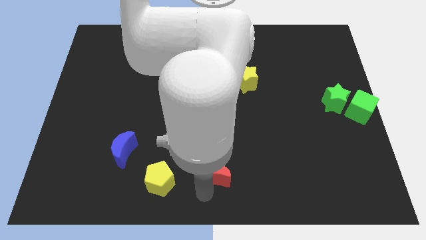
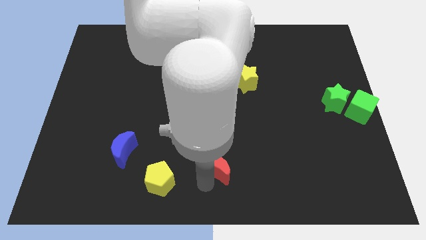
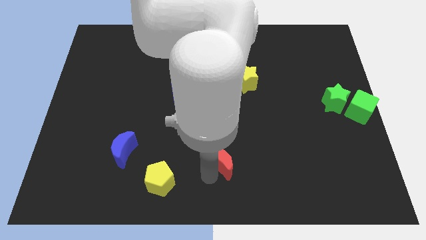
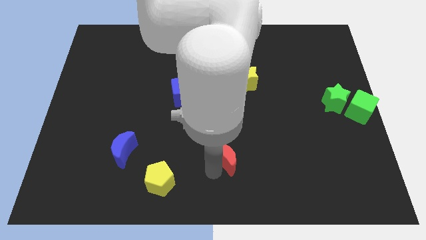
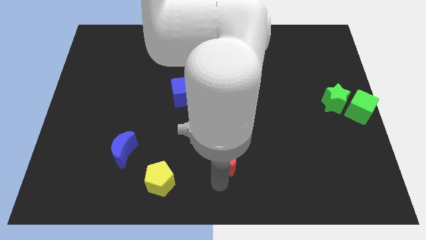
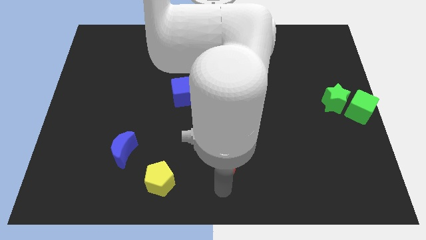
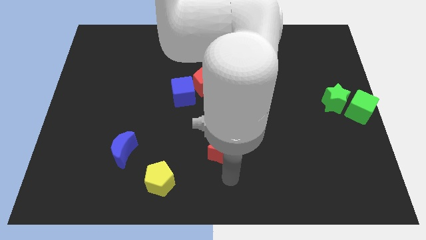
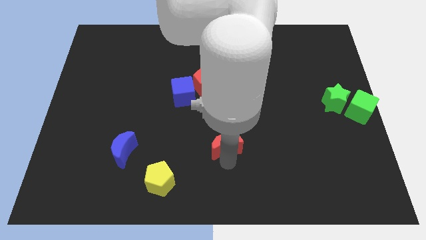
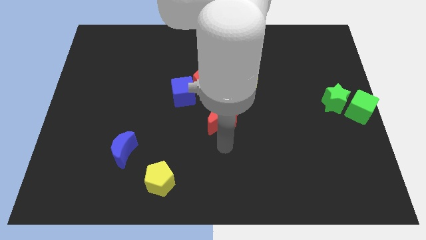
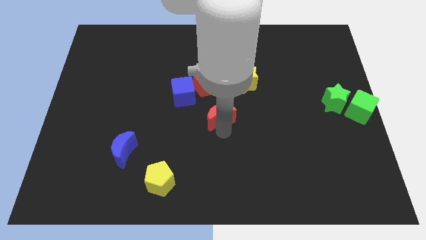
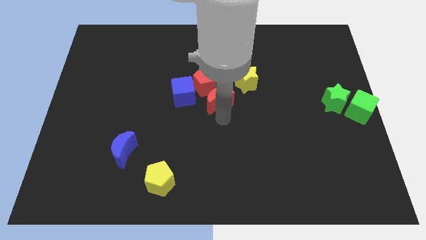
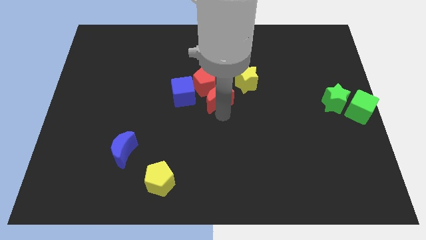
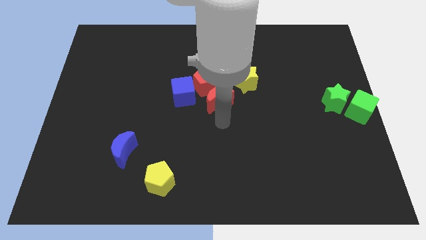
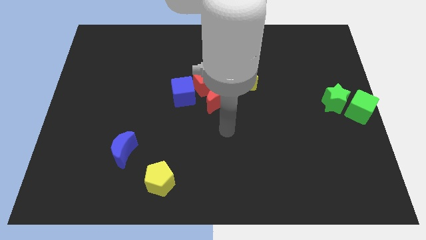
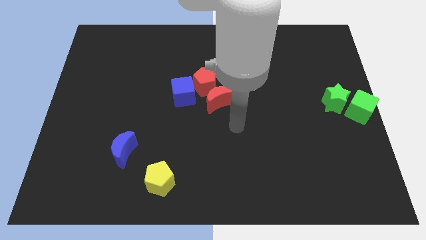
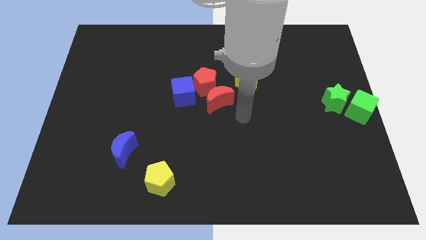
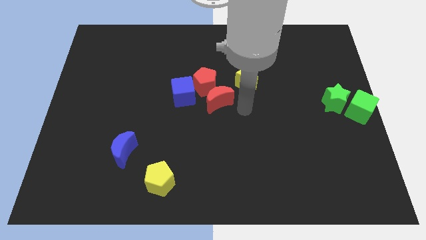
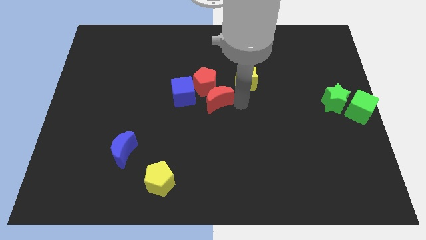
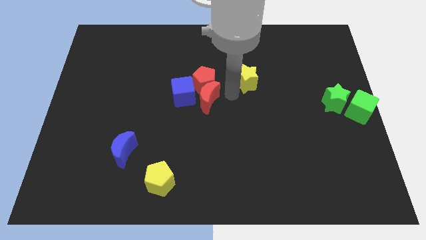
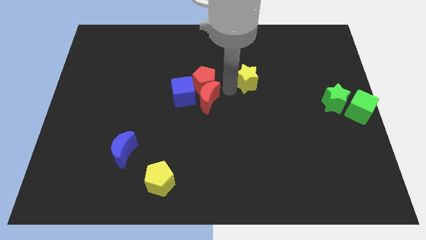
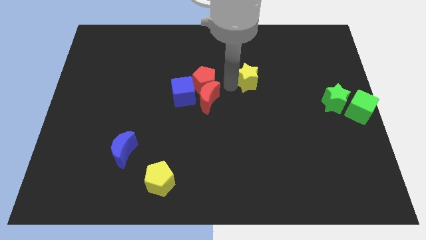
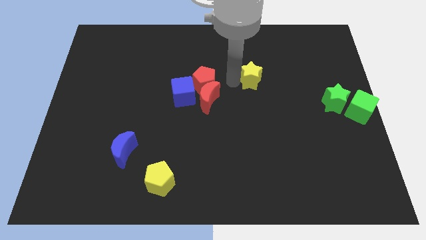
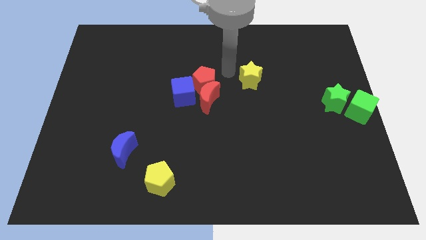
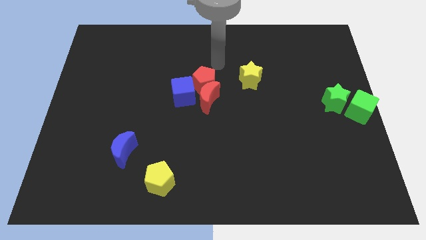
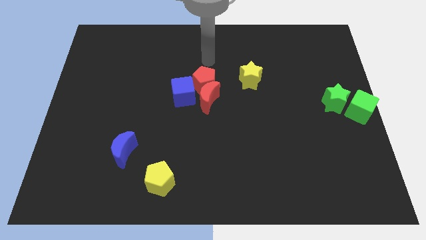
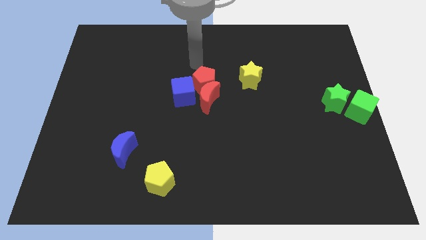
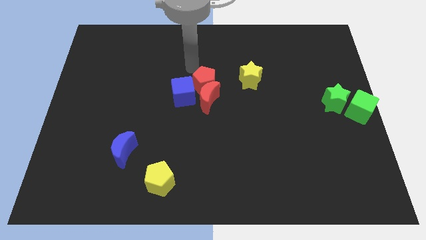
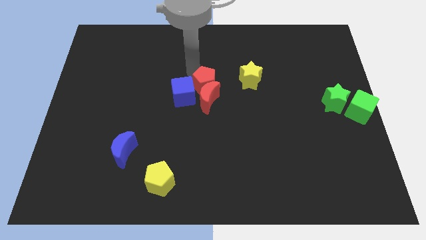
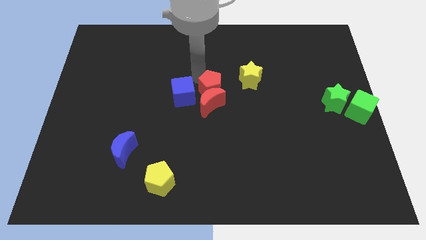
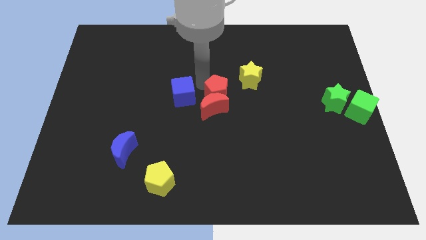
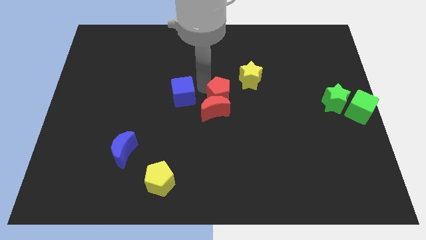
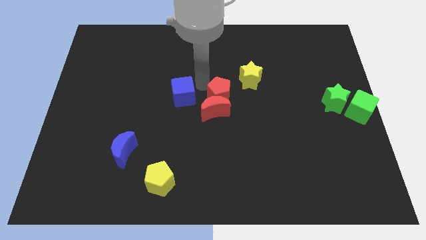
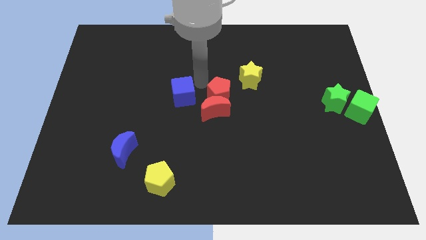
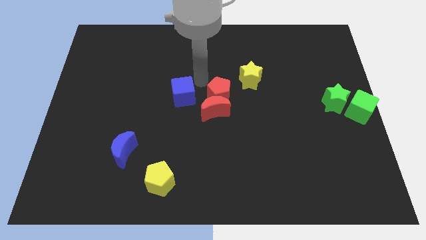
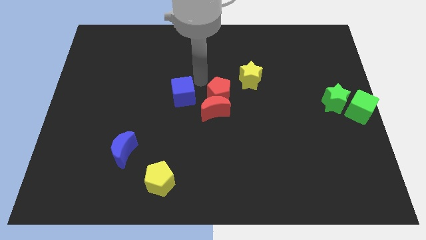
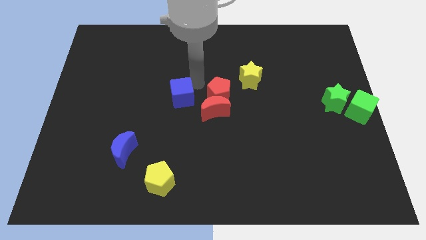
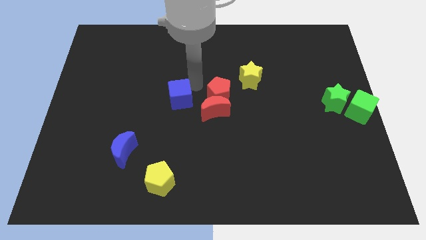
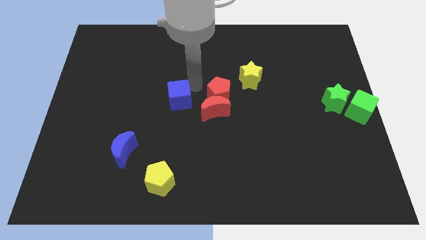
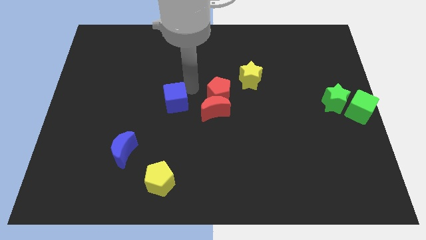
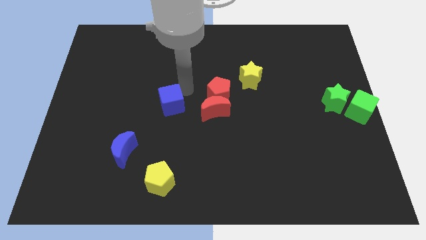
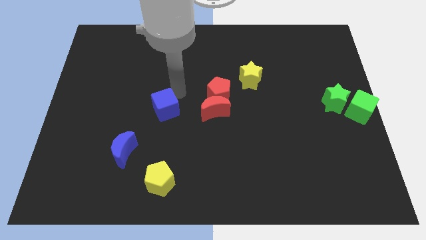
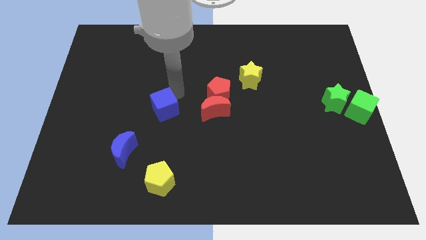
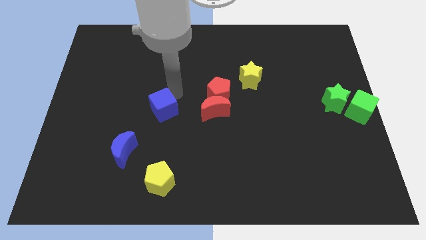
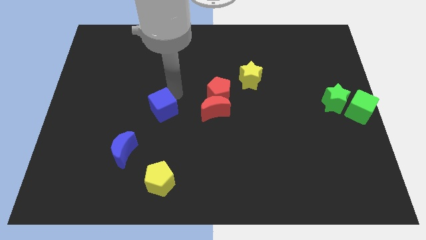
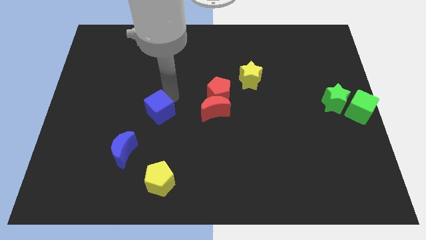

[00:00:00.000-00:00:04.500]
push the red crescent to the center of the board with the red pentagon

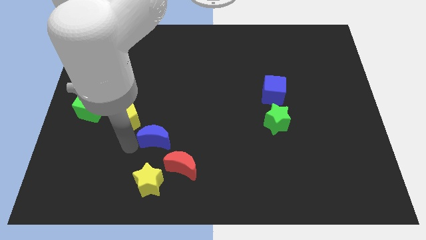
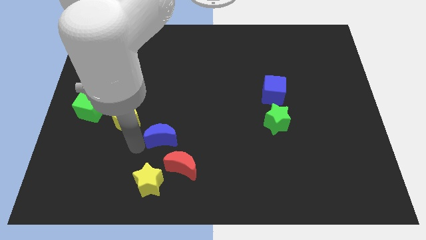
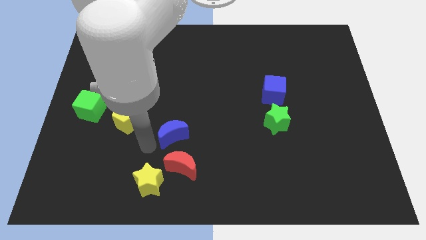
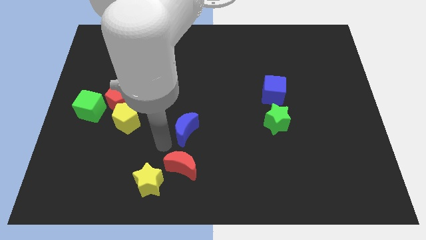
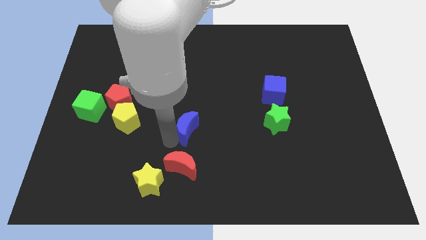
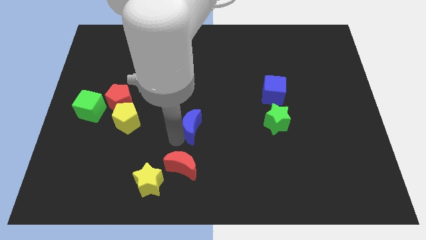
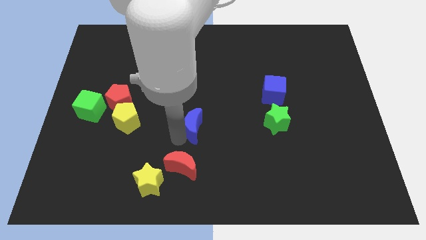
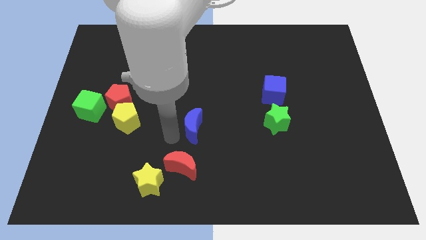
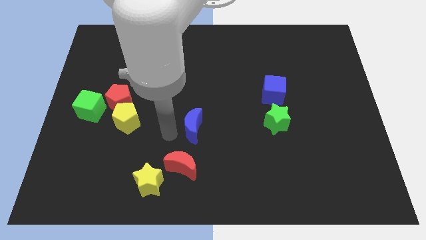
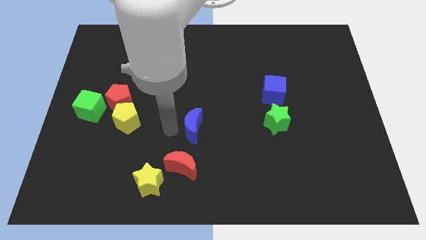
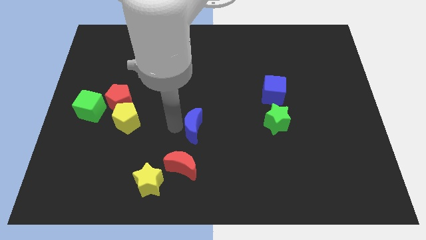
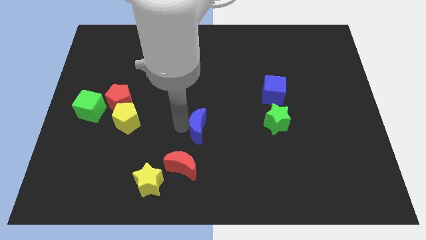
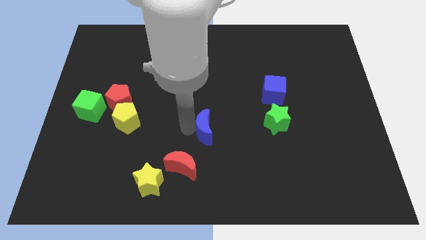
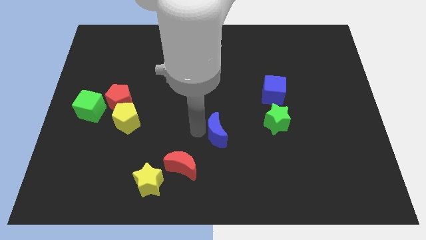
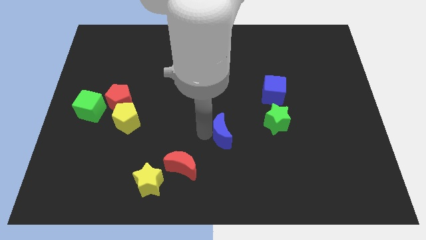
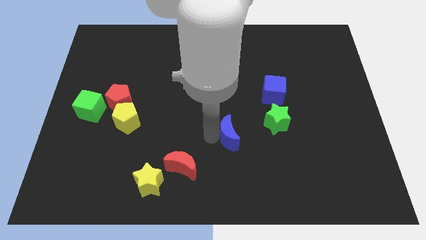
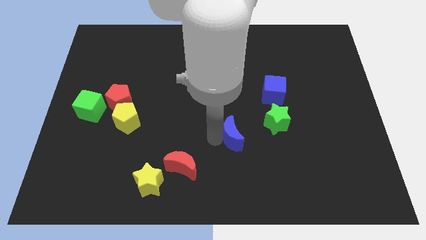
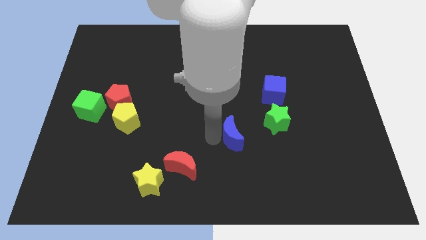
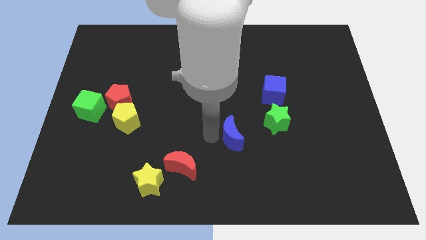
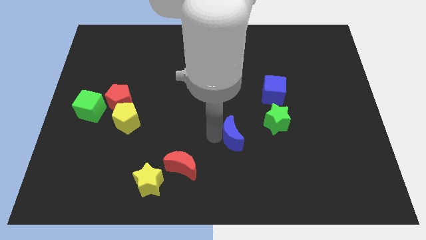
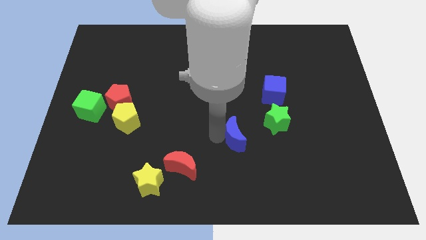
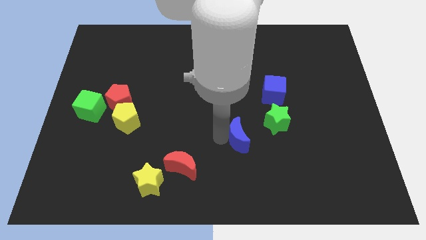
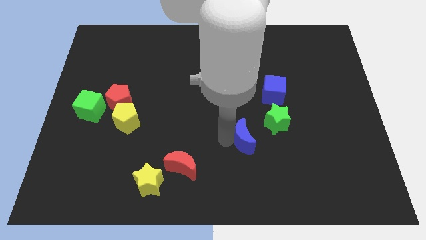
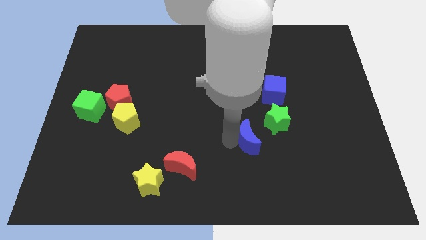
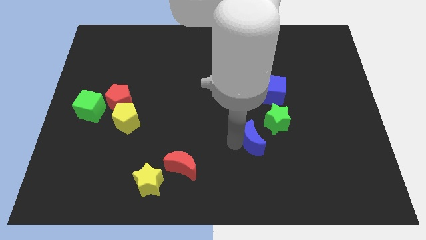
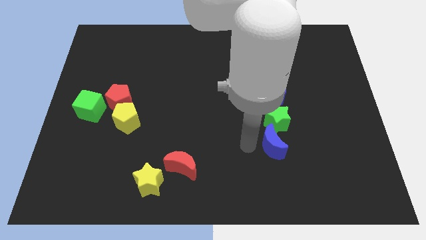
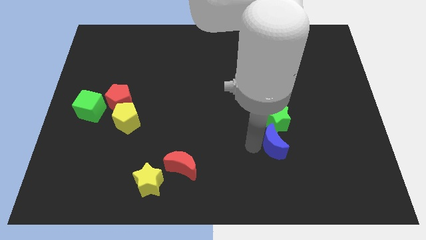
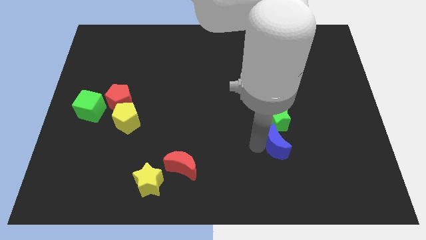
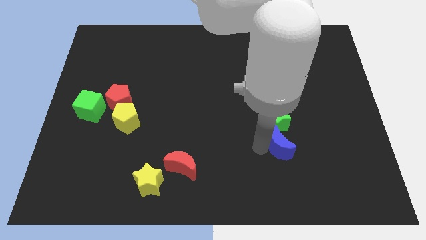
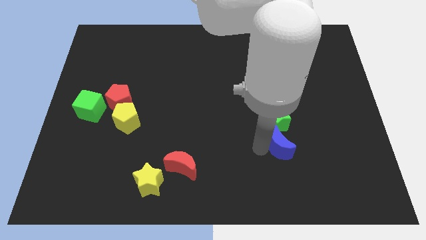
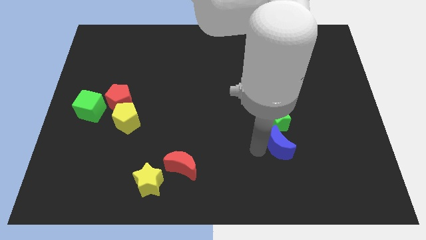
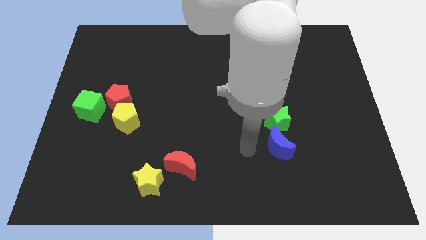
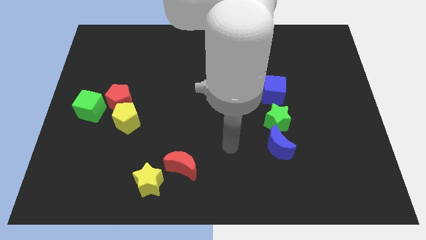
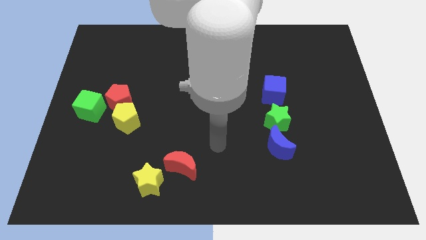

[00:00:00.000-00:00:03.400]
push the blue crescent vertically below the green star

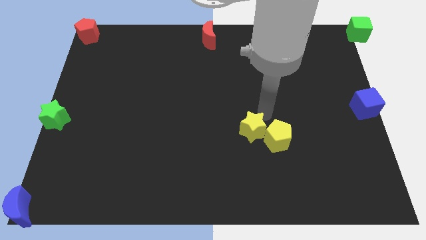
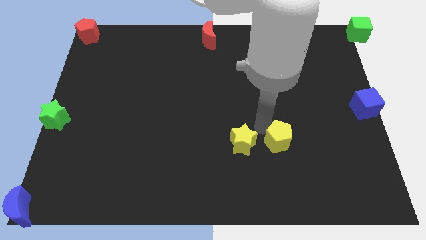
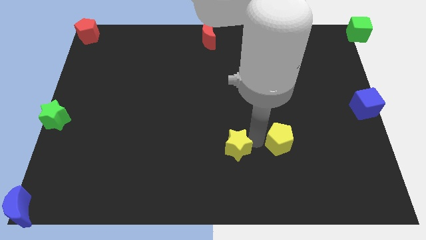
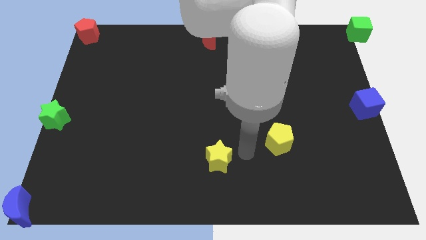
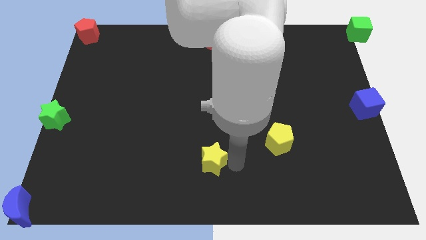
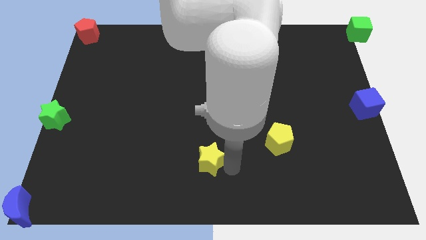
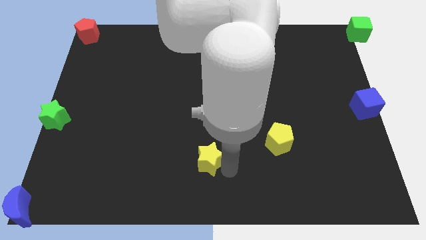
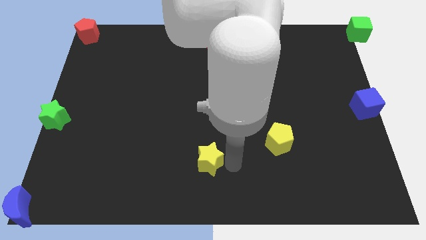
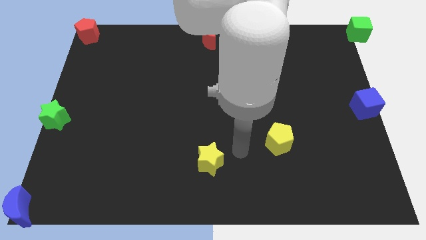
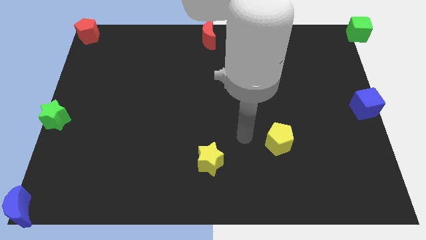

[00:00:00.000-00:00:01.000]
separate the group of yellow blocks

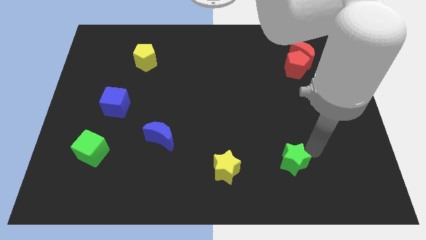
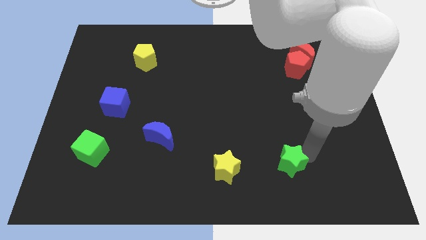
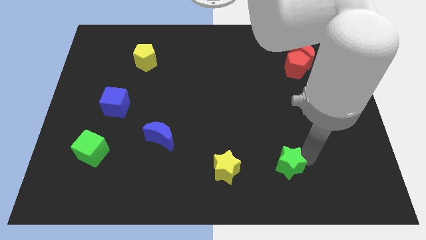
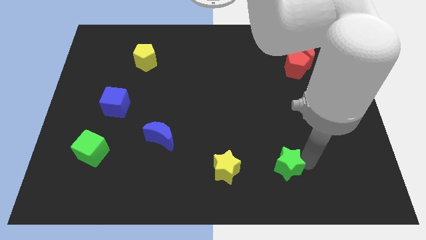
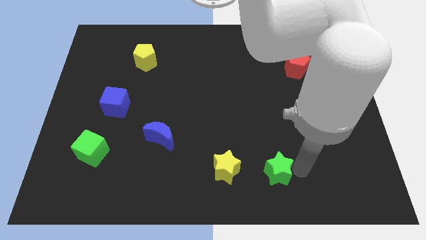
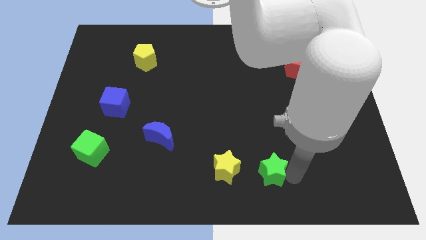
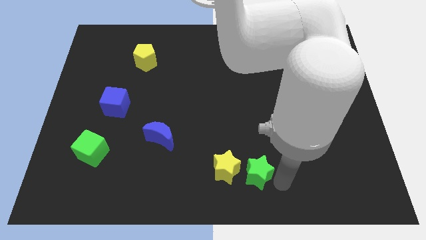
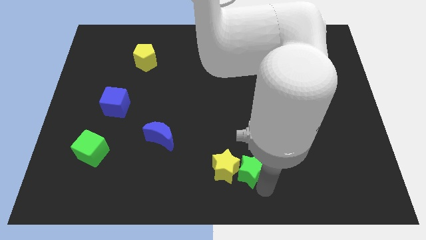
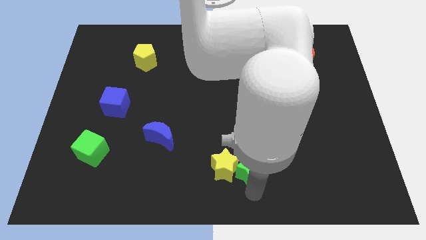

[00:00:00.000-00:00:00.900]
push green star in to yellow star
